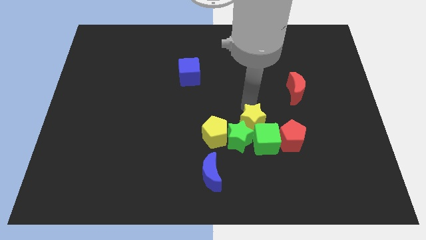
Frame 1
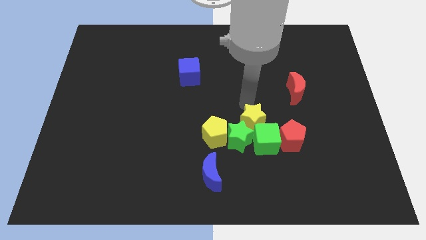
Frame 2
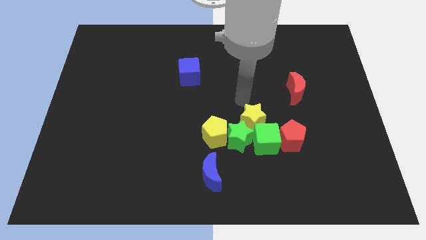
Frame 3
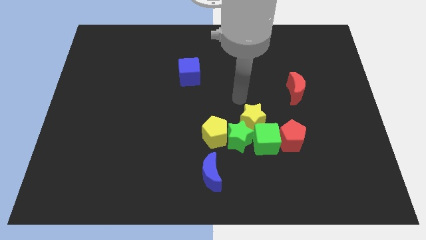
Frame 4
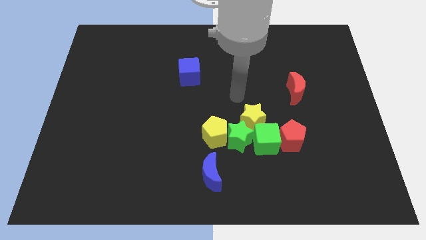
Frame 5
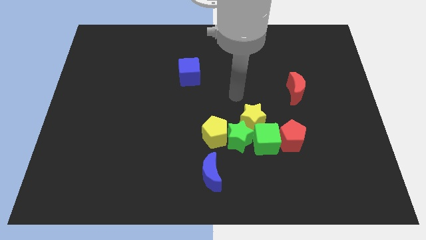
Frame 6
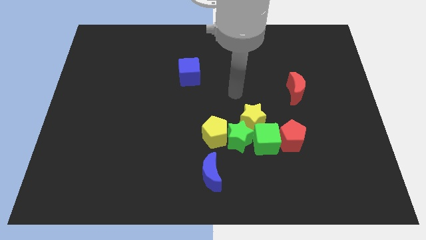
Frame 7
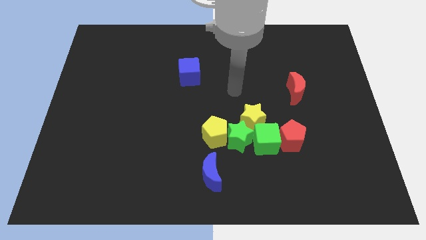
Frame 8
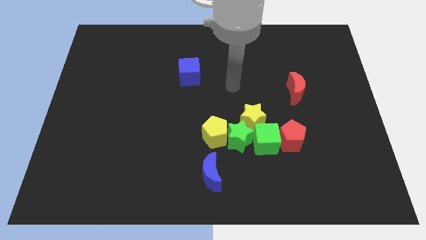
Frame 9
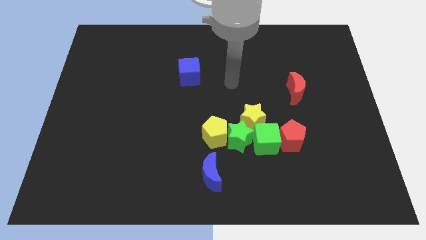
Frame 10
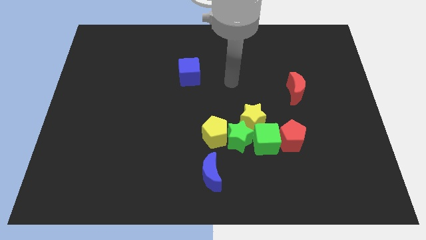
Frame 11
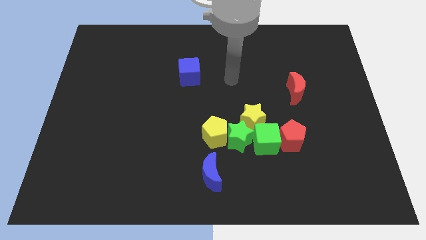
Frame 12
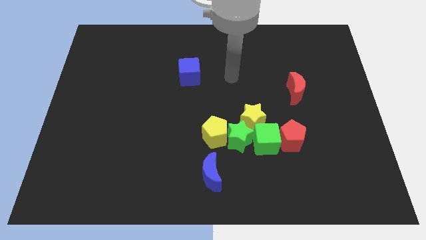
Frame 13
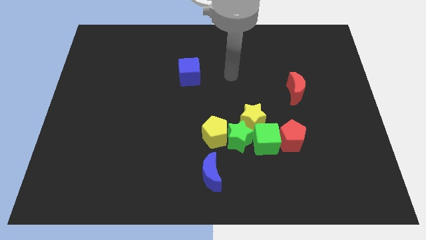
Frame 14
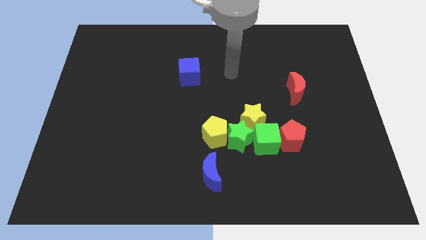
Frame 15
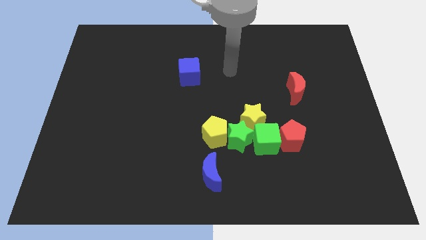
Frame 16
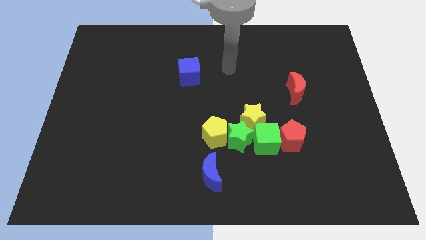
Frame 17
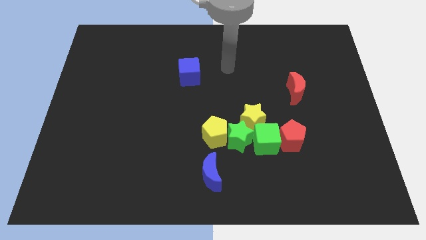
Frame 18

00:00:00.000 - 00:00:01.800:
move arm away from yellow star

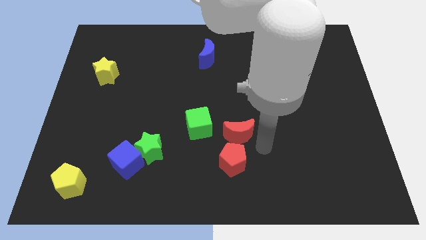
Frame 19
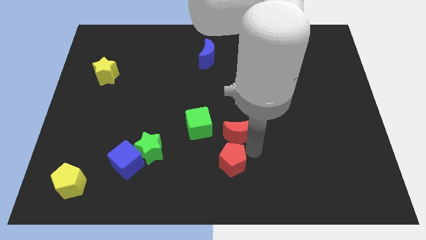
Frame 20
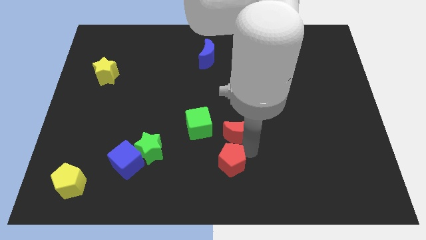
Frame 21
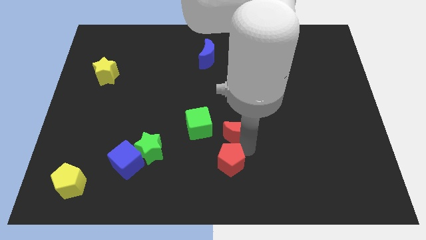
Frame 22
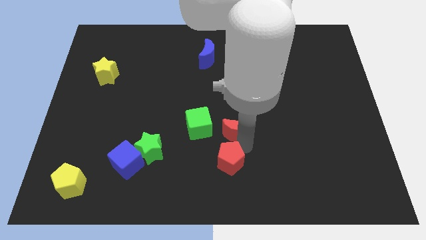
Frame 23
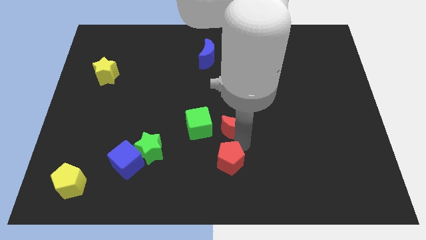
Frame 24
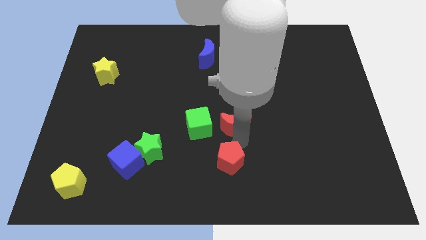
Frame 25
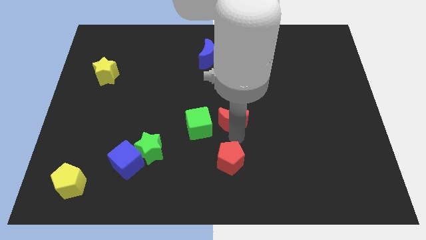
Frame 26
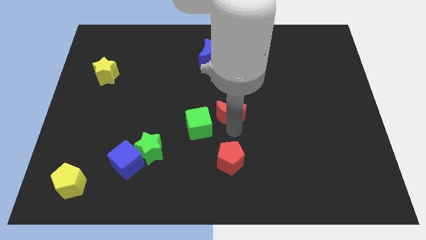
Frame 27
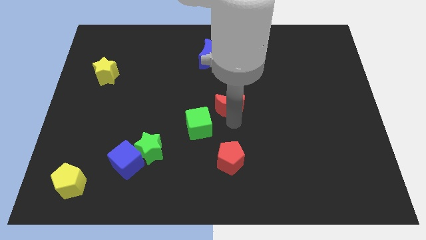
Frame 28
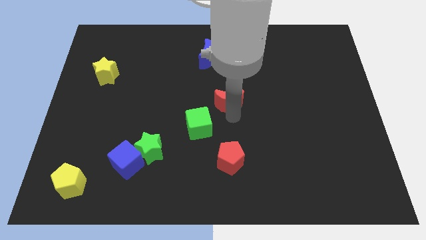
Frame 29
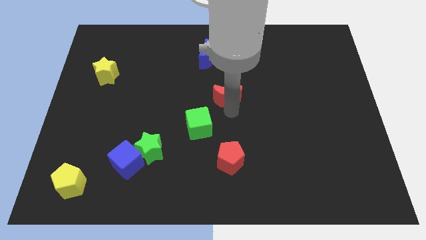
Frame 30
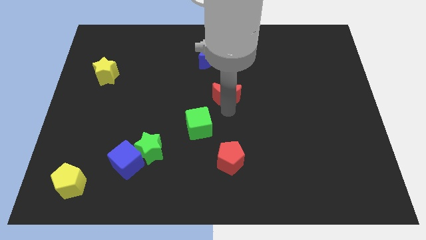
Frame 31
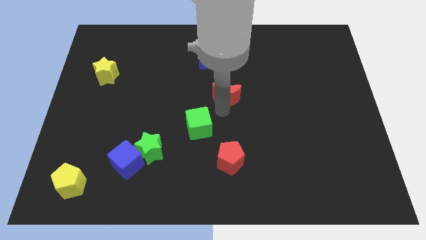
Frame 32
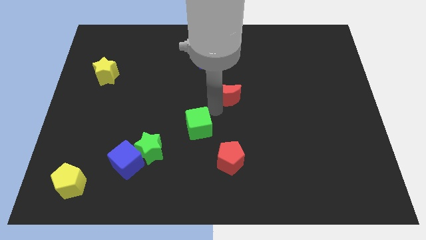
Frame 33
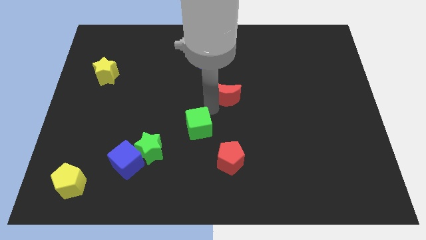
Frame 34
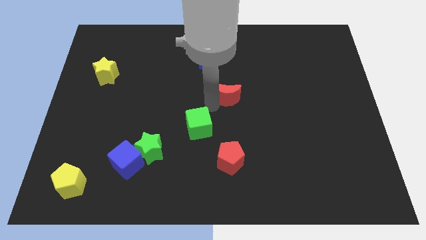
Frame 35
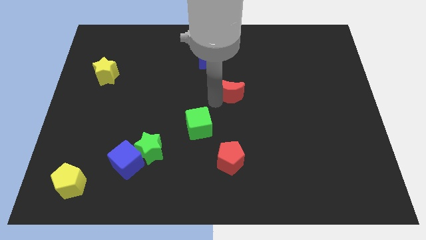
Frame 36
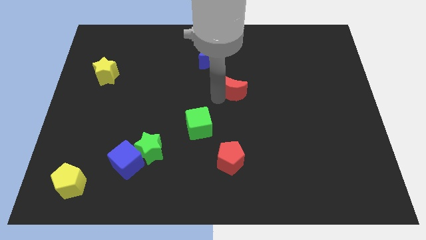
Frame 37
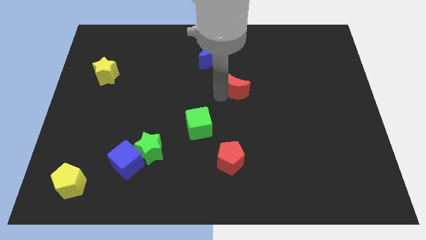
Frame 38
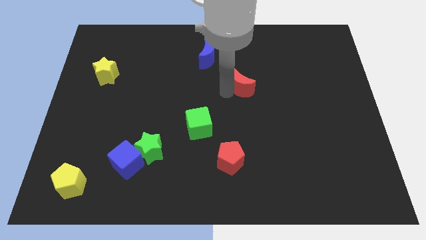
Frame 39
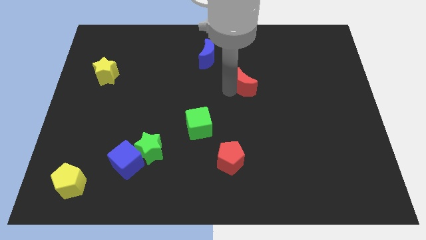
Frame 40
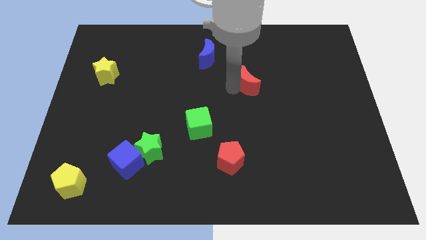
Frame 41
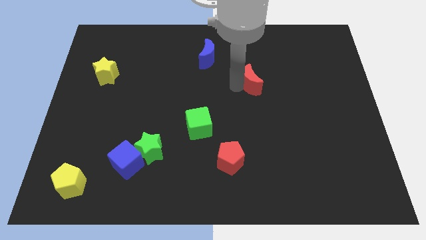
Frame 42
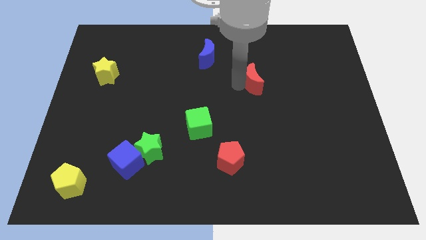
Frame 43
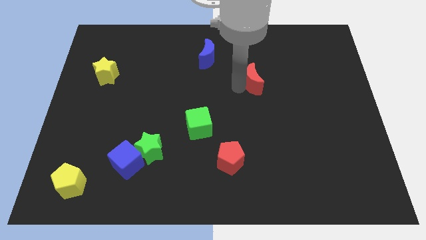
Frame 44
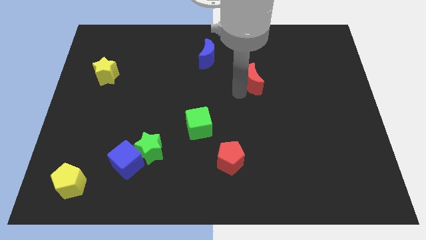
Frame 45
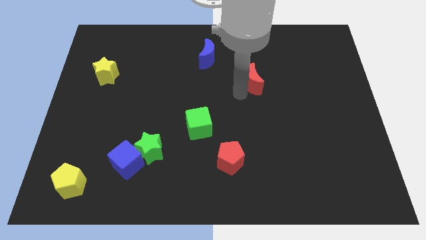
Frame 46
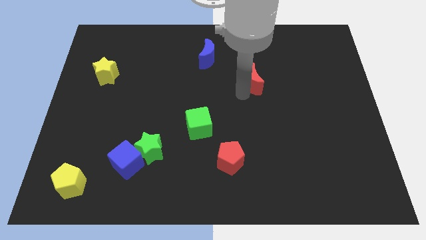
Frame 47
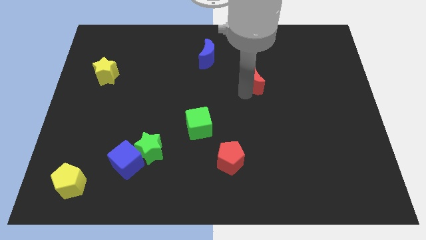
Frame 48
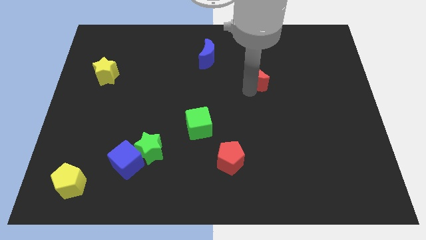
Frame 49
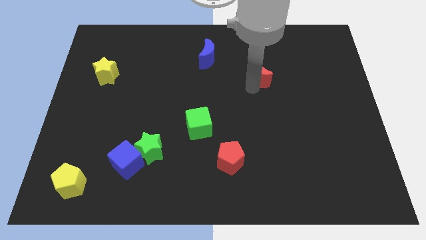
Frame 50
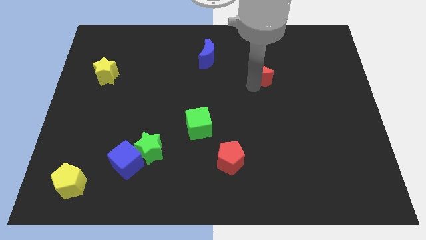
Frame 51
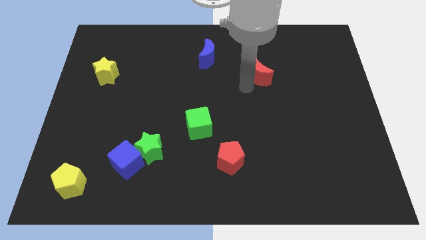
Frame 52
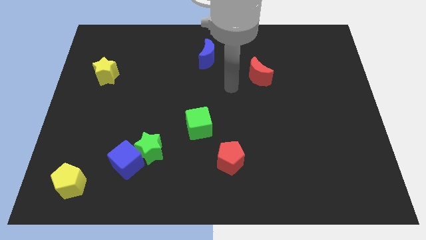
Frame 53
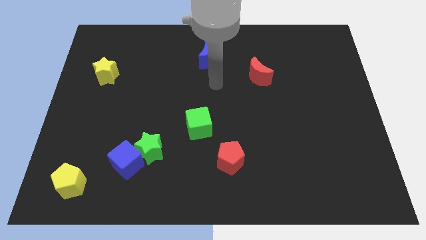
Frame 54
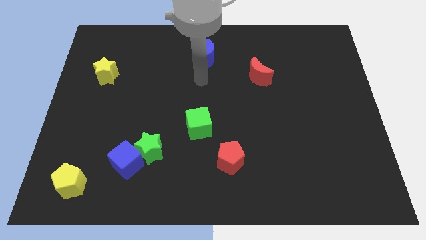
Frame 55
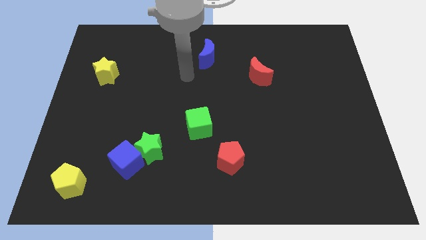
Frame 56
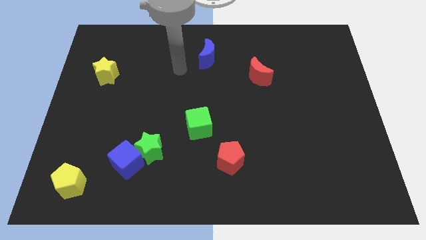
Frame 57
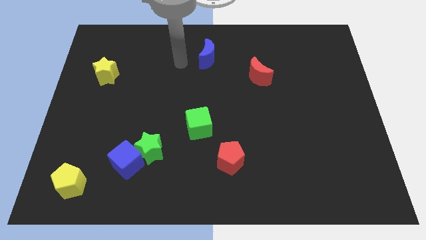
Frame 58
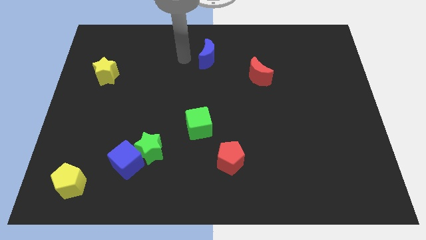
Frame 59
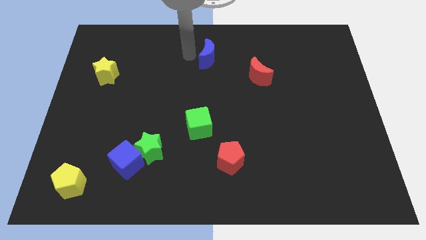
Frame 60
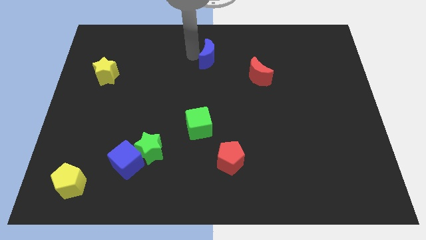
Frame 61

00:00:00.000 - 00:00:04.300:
push the red crescent diagonally on the top side of the red pentagon

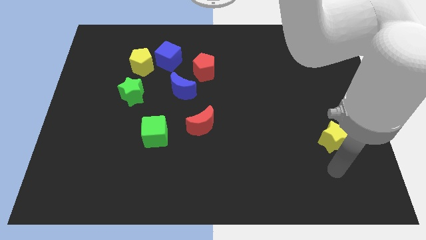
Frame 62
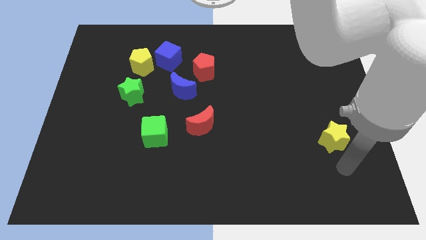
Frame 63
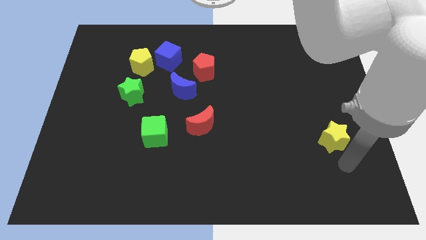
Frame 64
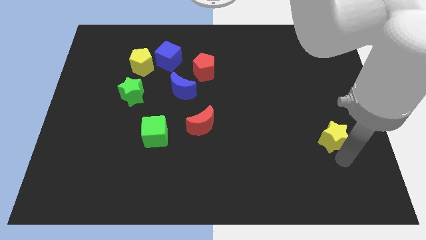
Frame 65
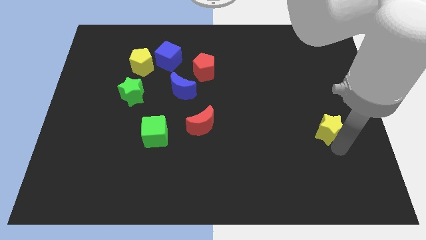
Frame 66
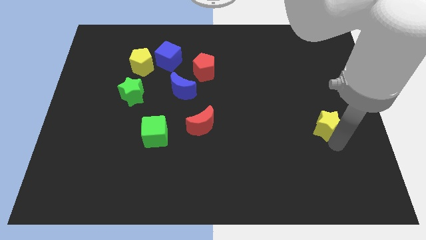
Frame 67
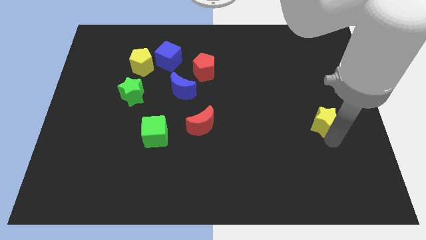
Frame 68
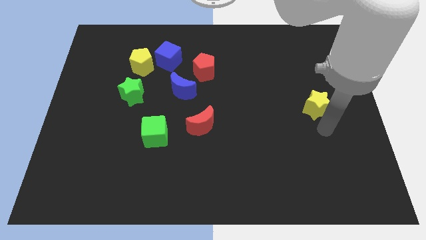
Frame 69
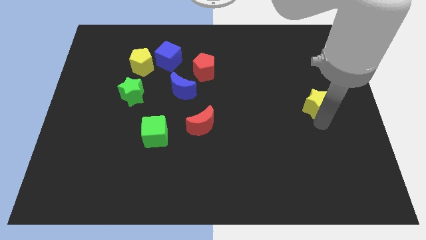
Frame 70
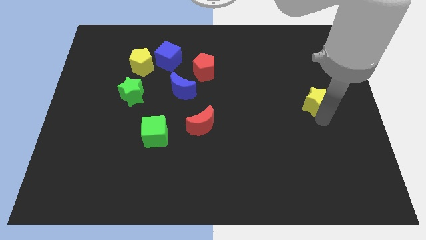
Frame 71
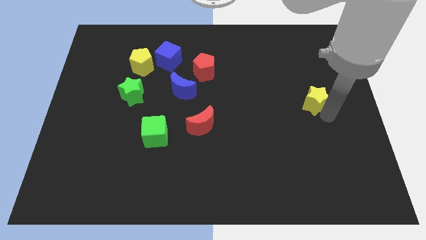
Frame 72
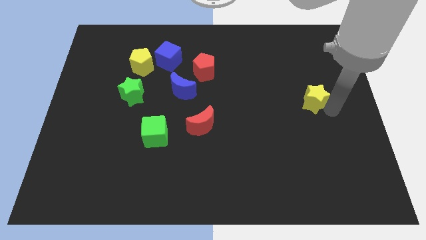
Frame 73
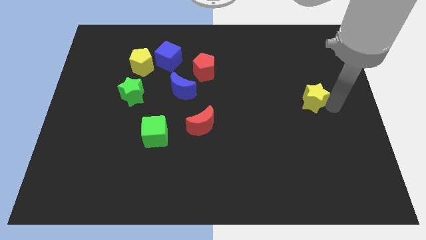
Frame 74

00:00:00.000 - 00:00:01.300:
slightly move yellow star to the right center of the board

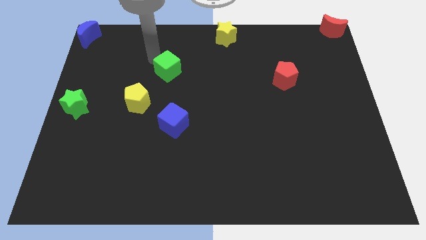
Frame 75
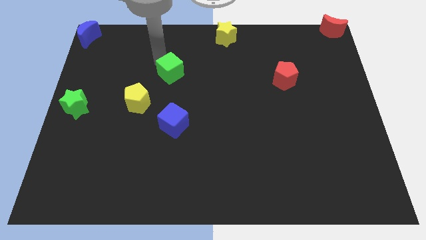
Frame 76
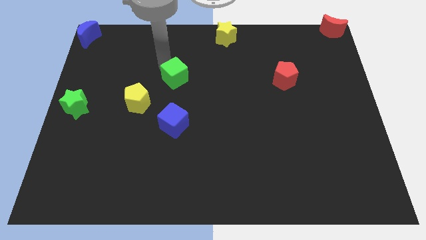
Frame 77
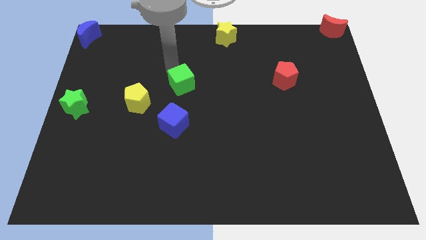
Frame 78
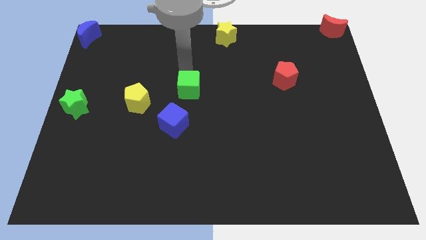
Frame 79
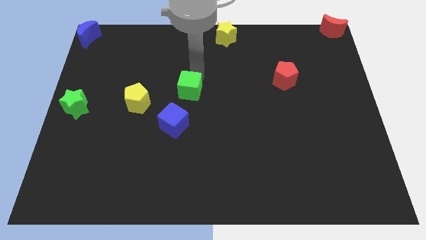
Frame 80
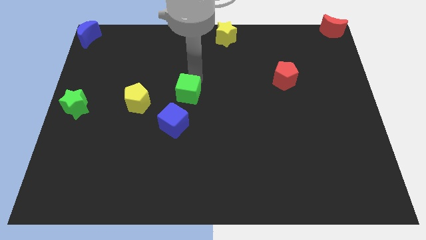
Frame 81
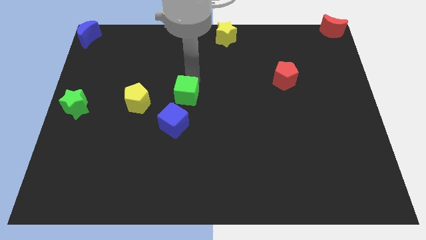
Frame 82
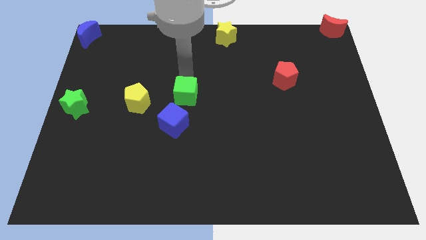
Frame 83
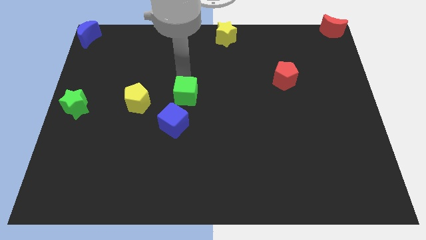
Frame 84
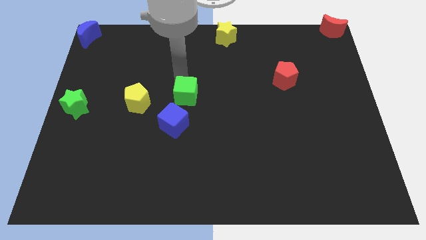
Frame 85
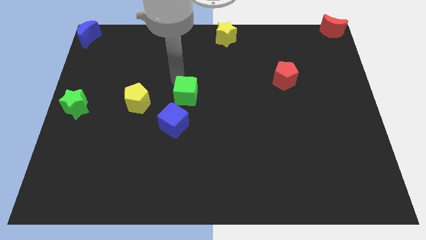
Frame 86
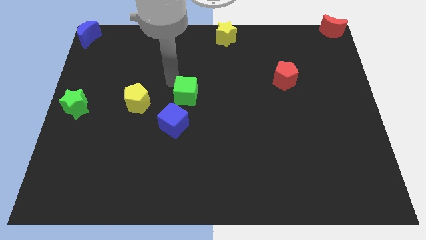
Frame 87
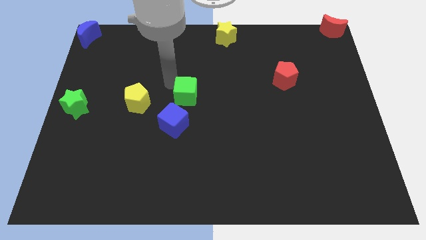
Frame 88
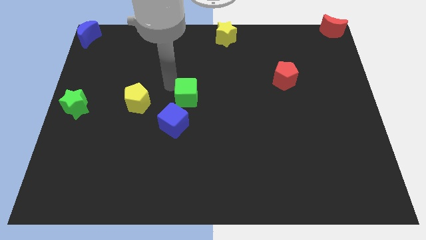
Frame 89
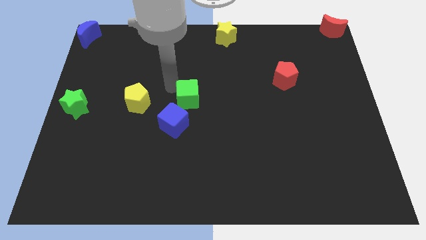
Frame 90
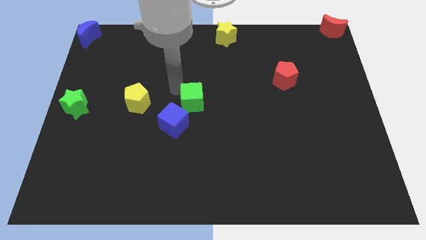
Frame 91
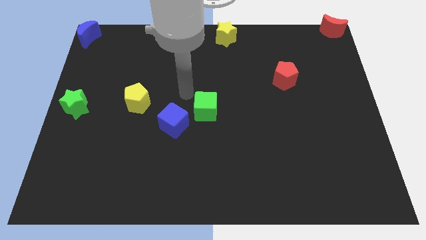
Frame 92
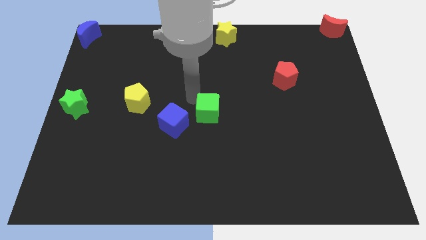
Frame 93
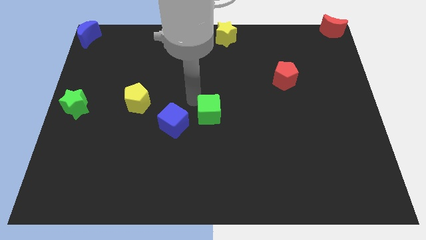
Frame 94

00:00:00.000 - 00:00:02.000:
place the green cube at the center of the board
